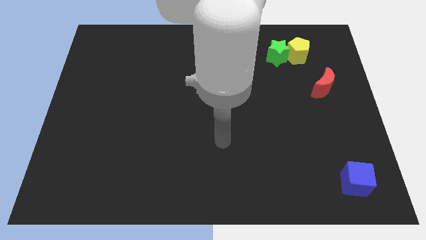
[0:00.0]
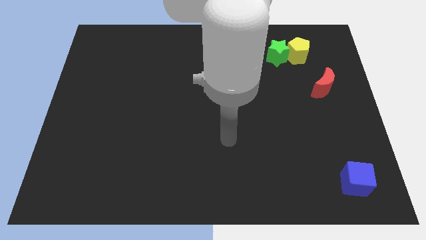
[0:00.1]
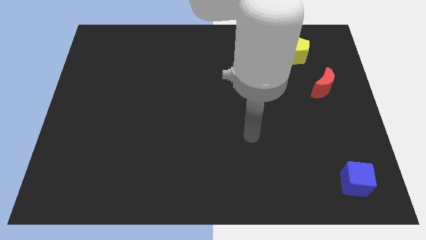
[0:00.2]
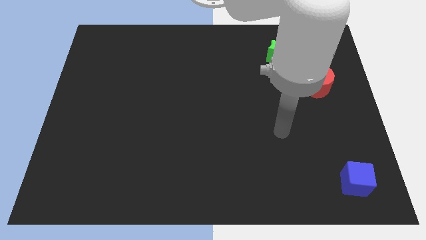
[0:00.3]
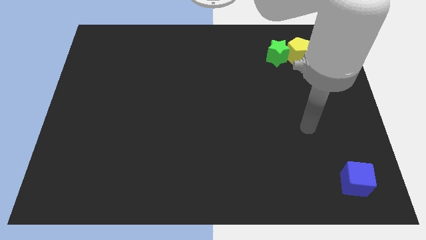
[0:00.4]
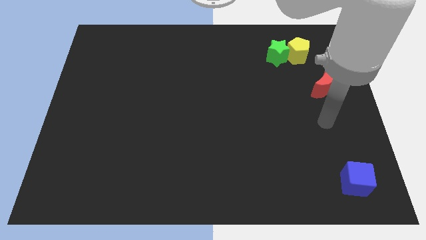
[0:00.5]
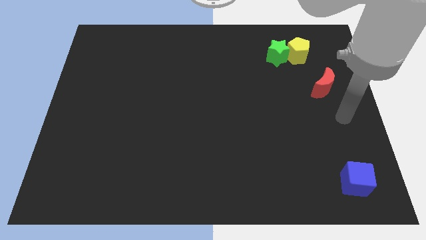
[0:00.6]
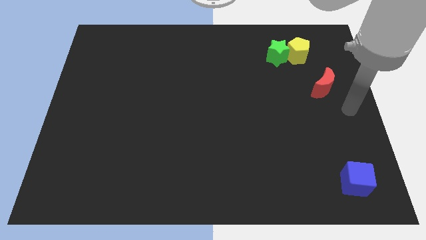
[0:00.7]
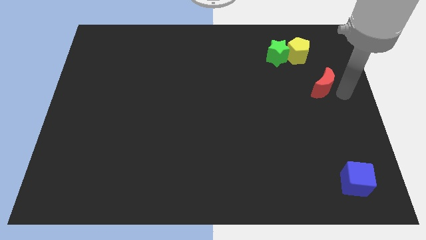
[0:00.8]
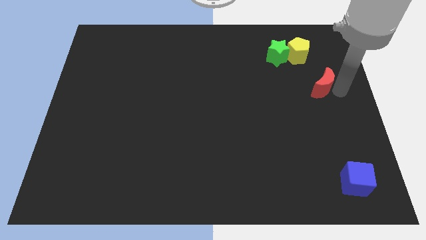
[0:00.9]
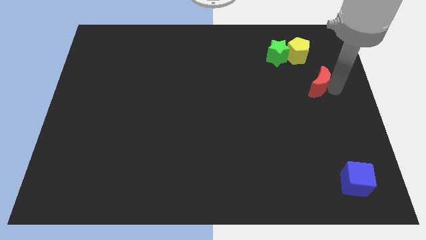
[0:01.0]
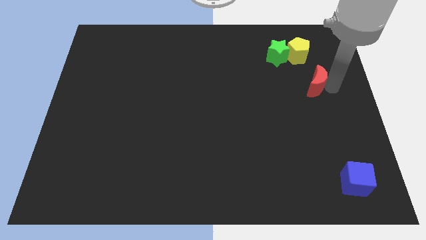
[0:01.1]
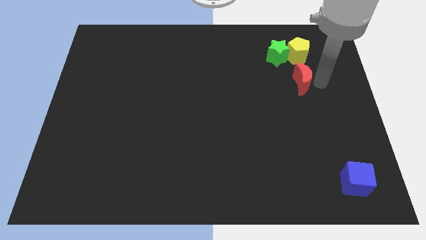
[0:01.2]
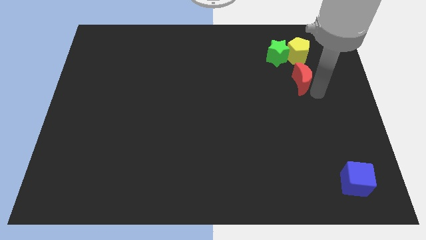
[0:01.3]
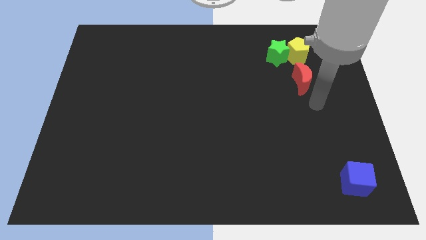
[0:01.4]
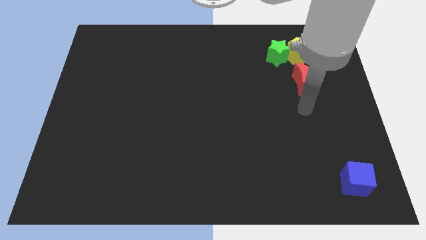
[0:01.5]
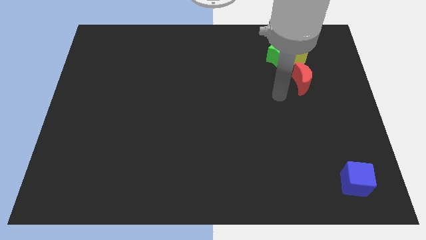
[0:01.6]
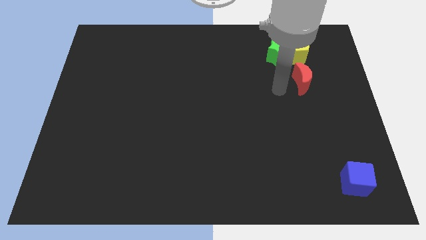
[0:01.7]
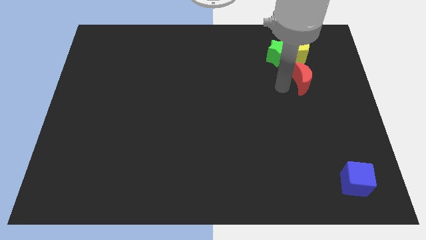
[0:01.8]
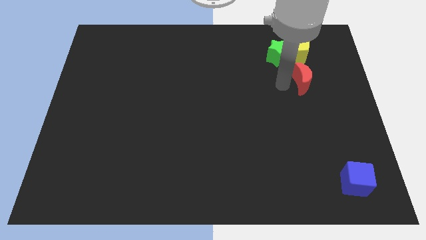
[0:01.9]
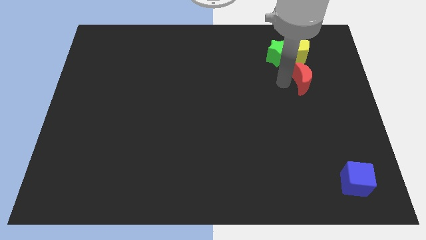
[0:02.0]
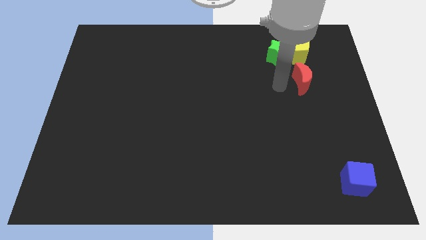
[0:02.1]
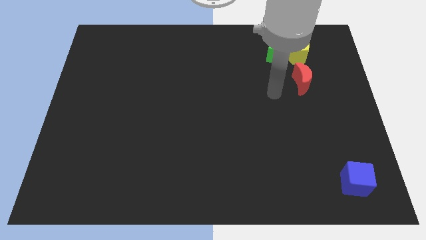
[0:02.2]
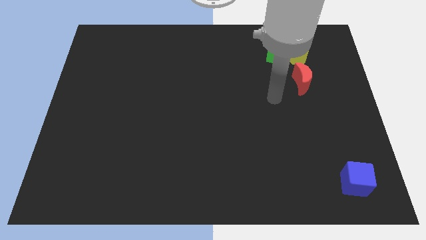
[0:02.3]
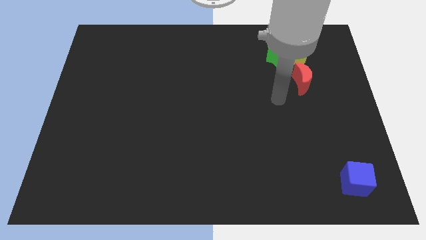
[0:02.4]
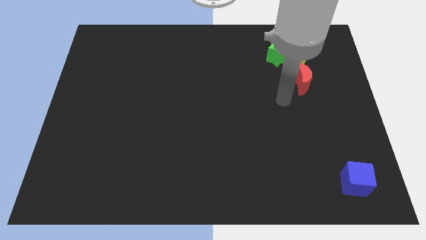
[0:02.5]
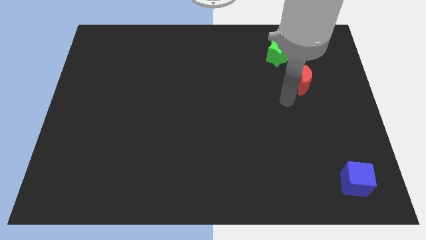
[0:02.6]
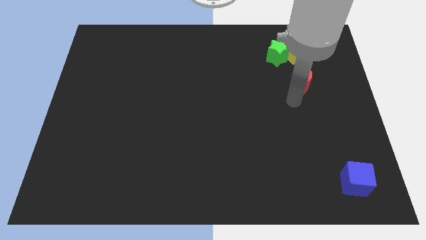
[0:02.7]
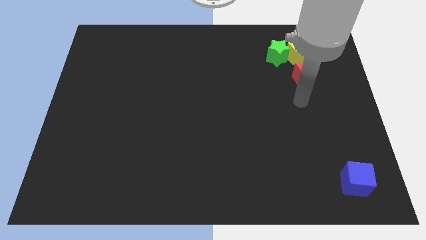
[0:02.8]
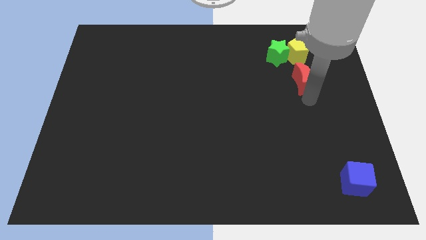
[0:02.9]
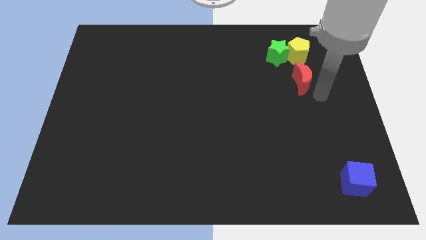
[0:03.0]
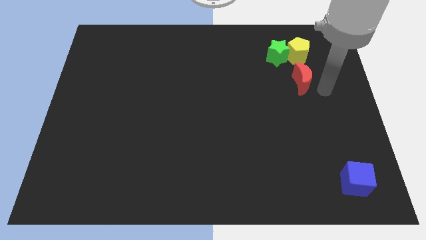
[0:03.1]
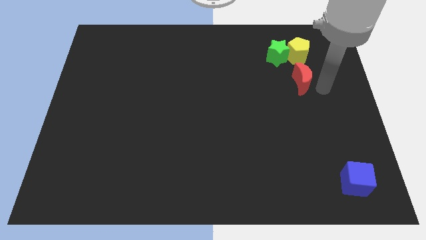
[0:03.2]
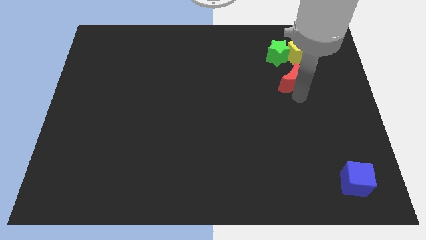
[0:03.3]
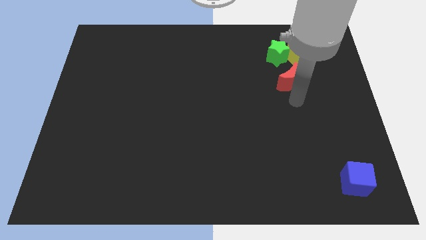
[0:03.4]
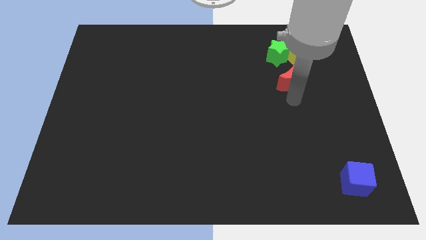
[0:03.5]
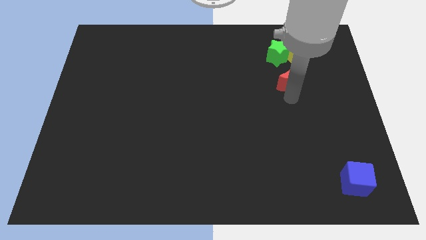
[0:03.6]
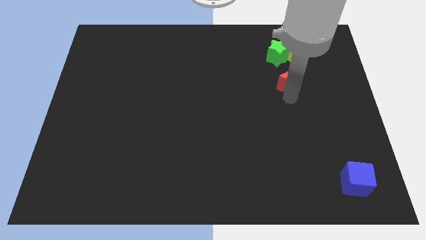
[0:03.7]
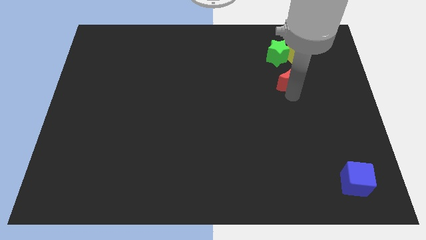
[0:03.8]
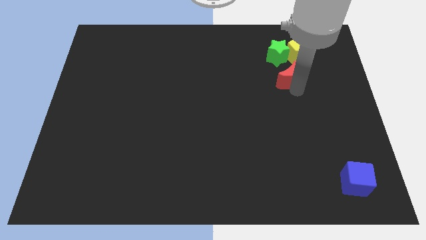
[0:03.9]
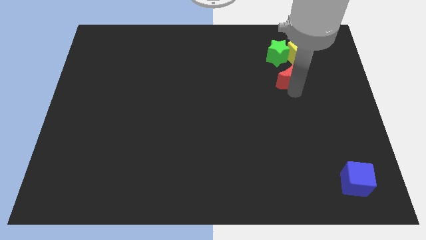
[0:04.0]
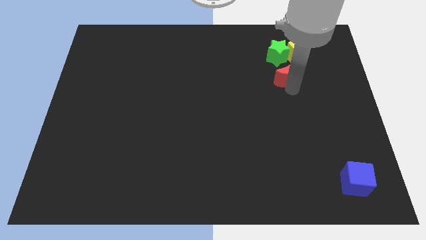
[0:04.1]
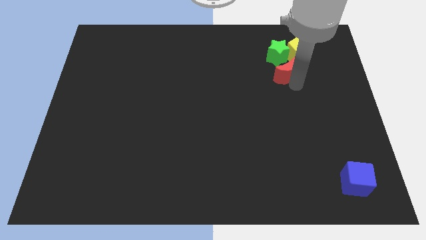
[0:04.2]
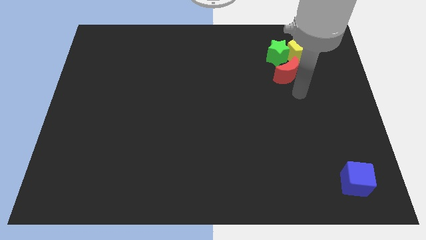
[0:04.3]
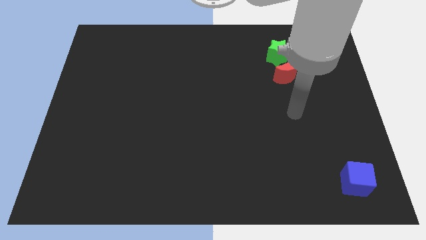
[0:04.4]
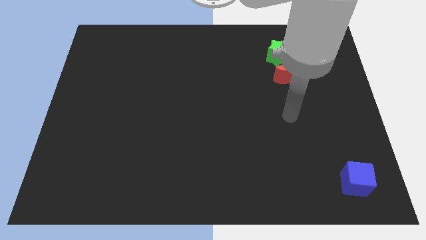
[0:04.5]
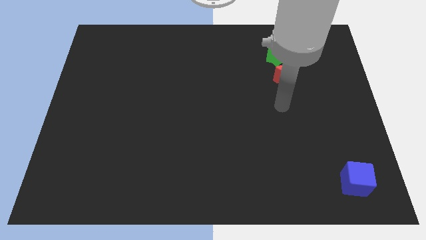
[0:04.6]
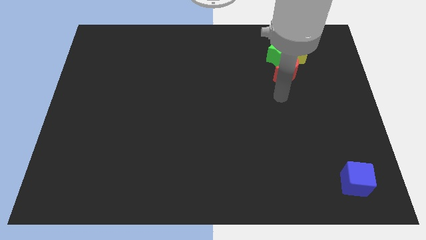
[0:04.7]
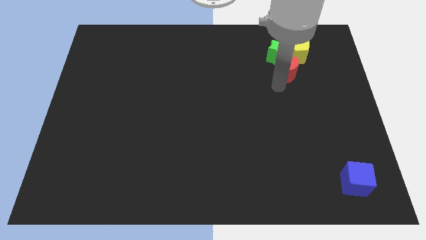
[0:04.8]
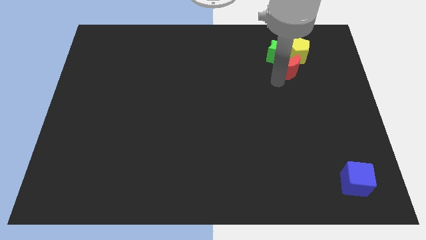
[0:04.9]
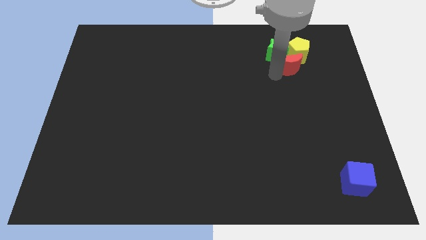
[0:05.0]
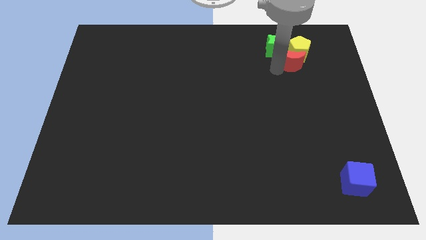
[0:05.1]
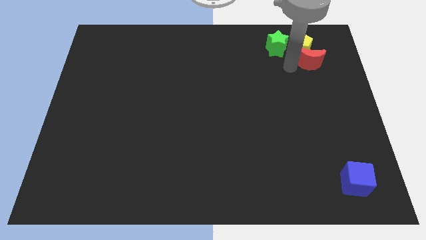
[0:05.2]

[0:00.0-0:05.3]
slide the red moon to the yellow pentagon

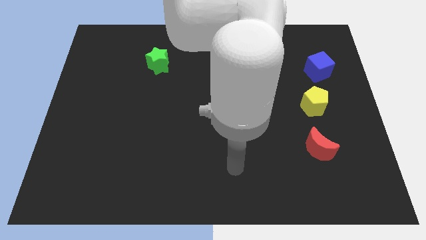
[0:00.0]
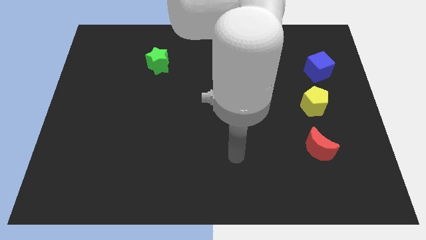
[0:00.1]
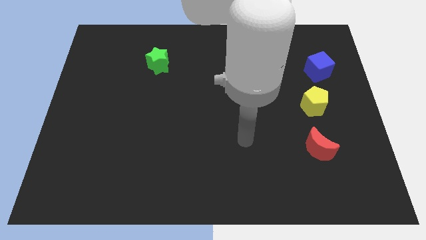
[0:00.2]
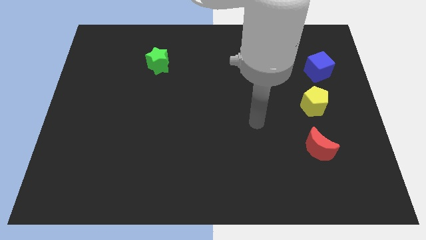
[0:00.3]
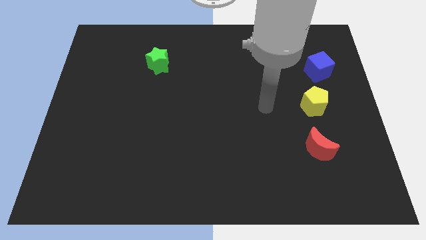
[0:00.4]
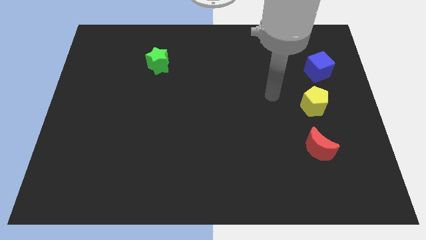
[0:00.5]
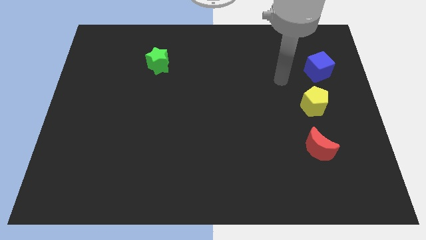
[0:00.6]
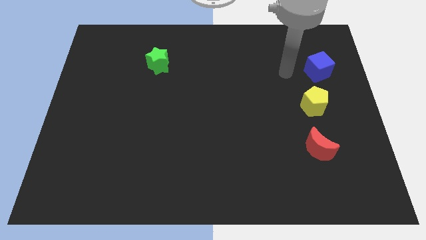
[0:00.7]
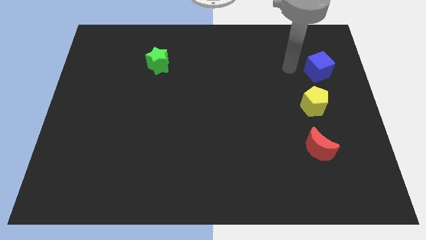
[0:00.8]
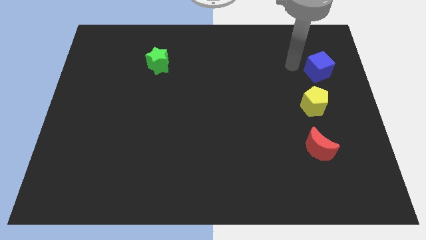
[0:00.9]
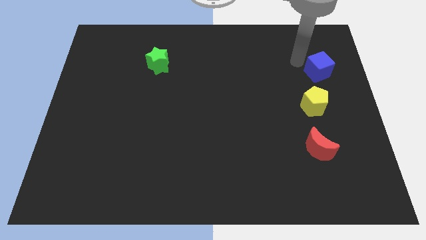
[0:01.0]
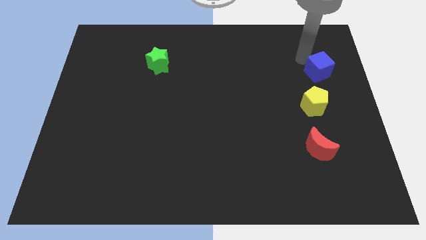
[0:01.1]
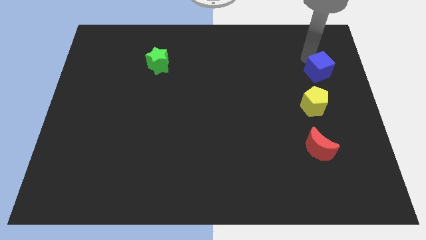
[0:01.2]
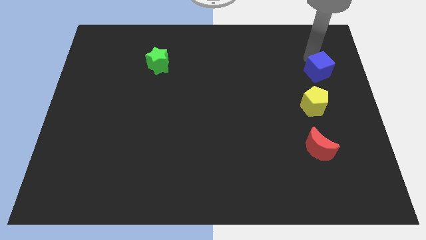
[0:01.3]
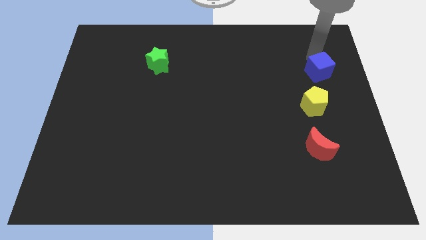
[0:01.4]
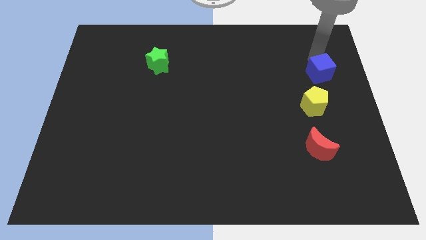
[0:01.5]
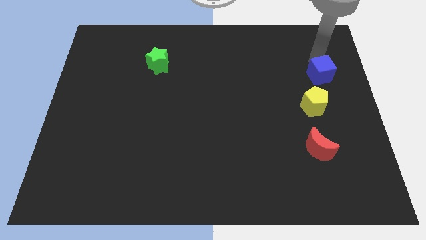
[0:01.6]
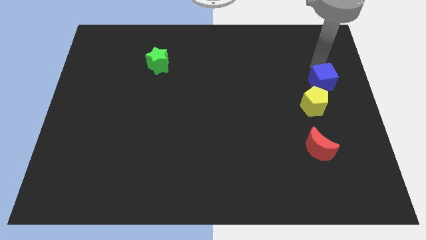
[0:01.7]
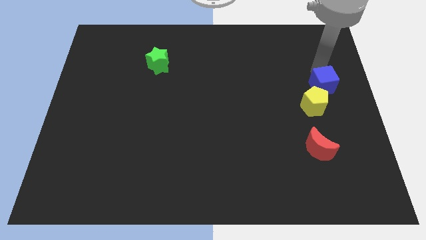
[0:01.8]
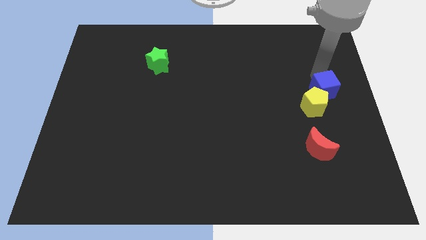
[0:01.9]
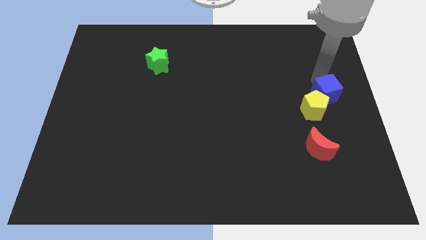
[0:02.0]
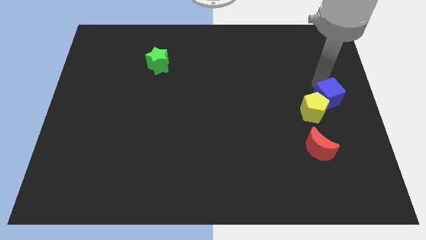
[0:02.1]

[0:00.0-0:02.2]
put the cube towards the yellow block

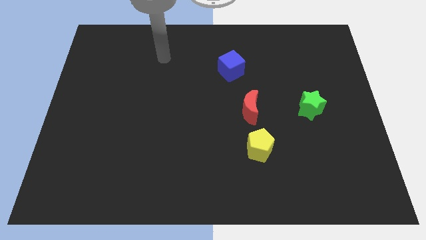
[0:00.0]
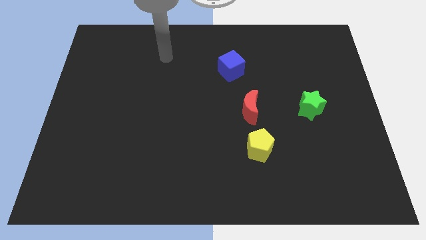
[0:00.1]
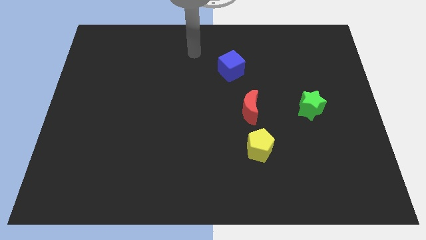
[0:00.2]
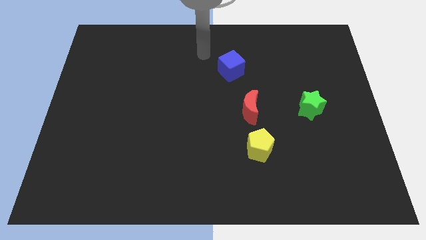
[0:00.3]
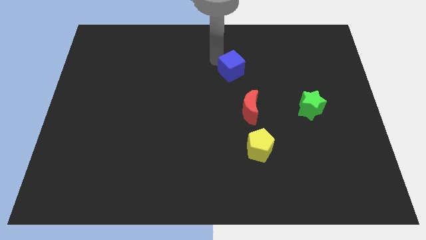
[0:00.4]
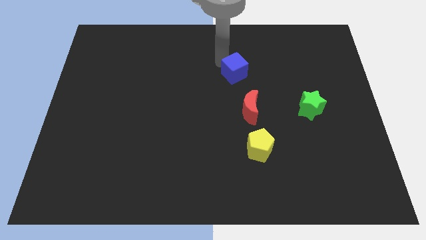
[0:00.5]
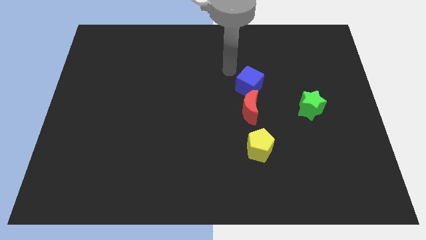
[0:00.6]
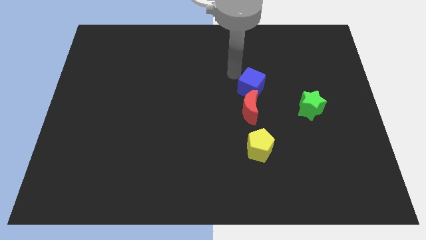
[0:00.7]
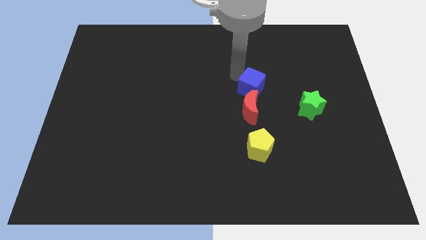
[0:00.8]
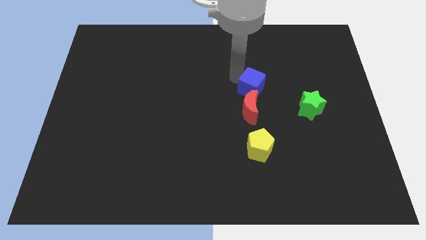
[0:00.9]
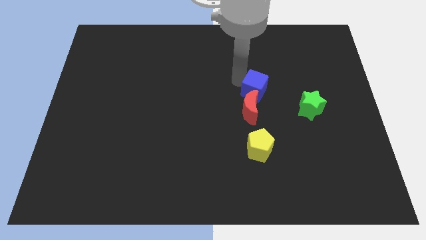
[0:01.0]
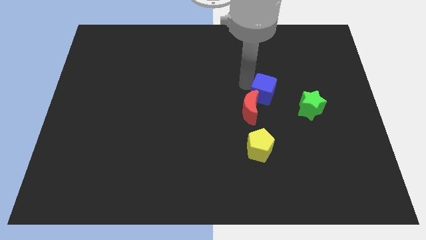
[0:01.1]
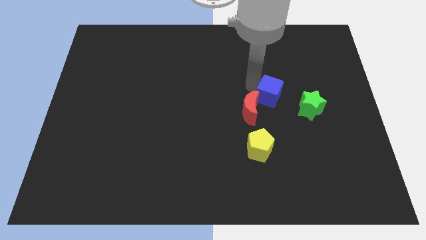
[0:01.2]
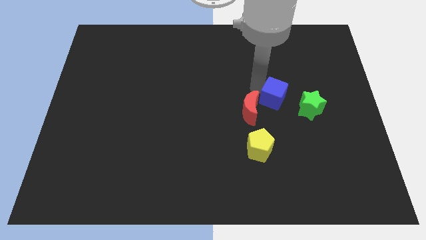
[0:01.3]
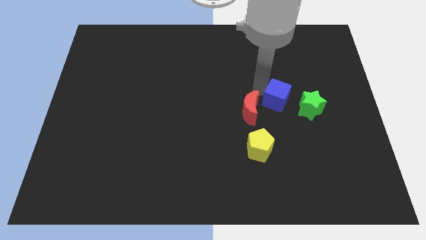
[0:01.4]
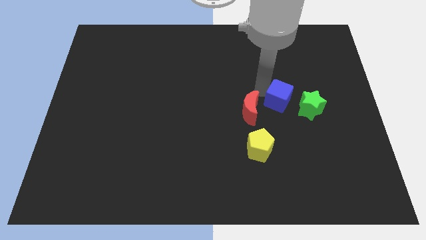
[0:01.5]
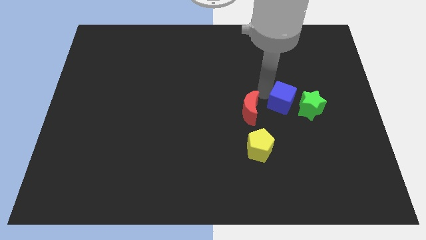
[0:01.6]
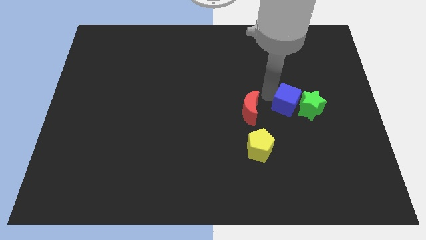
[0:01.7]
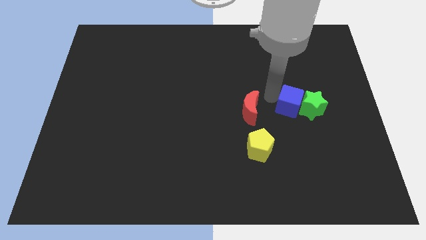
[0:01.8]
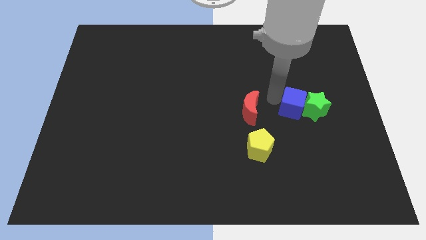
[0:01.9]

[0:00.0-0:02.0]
push the cube close to the green star
